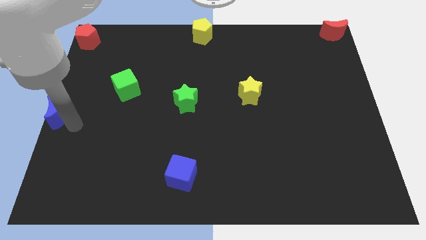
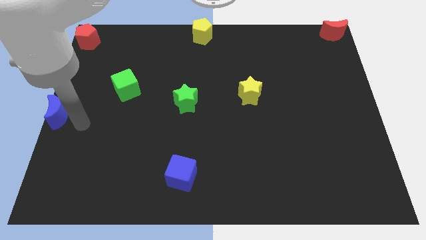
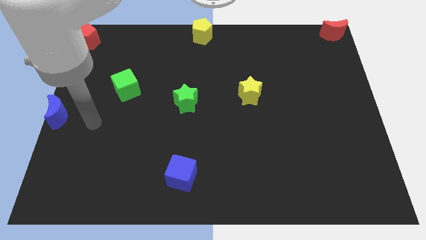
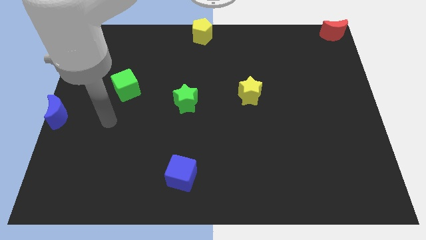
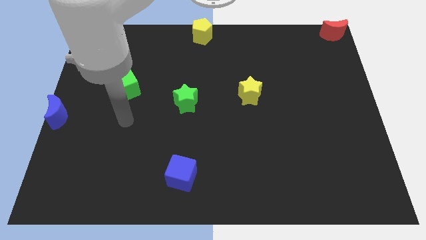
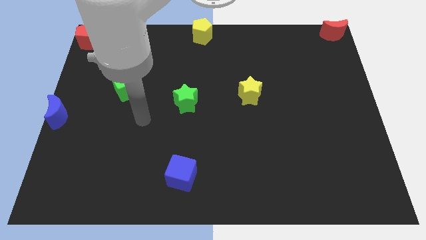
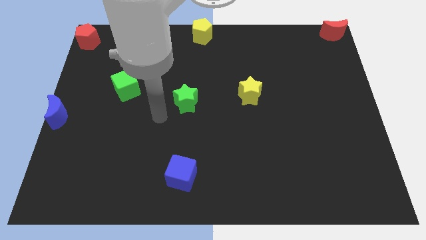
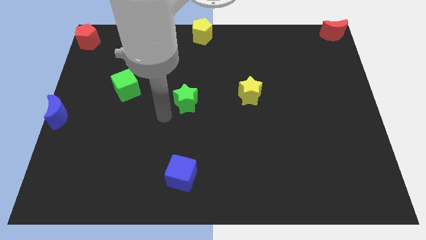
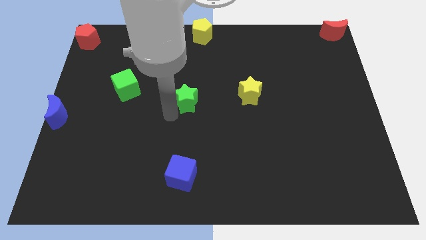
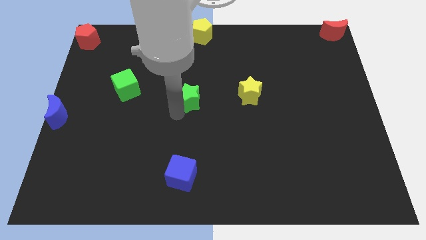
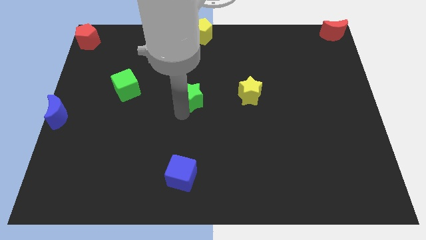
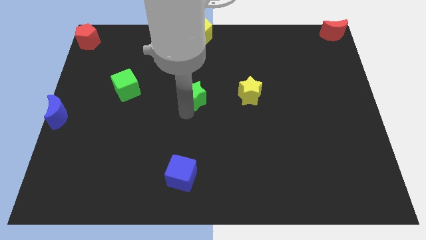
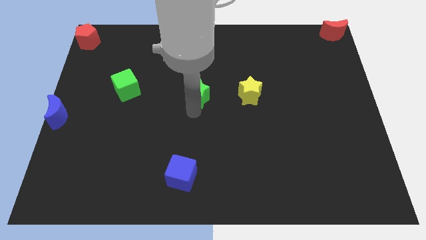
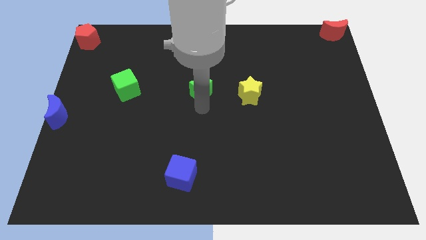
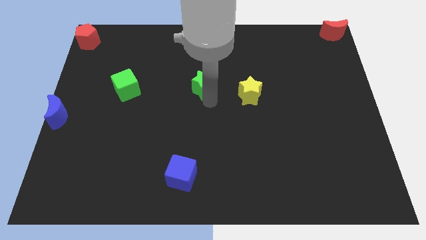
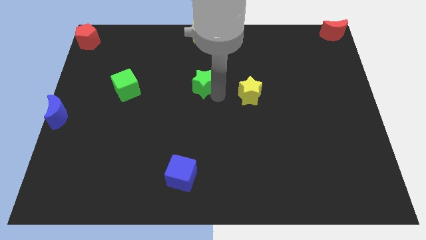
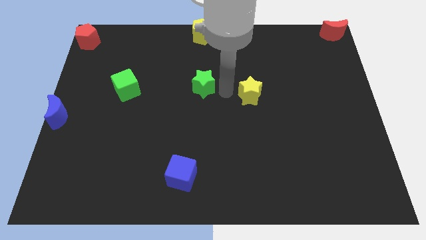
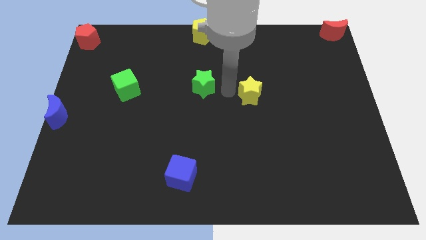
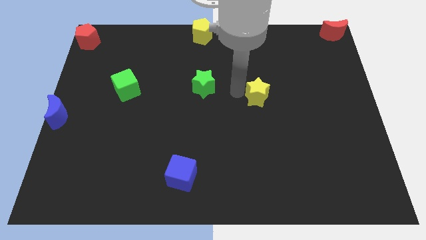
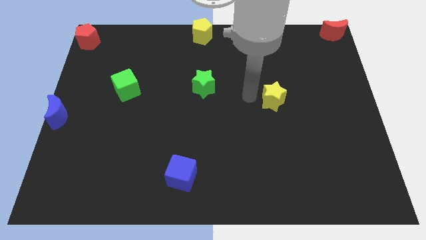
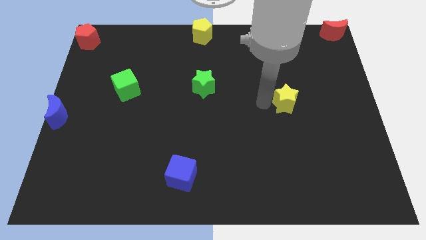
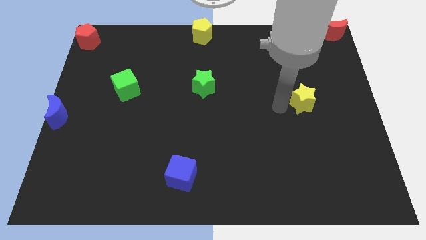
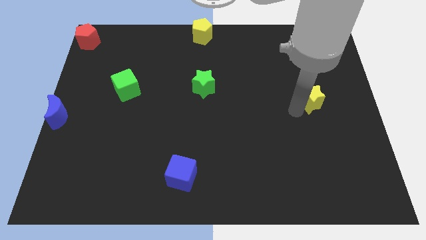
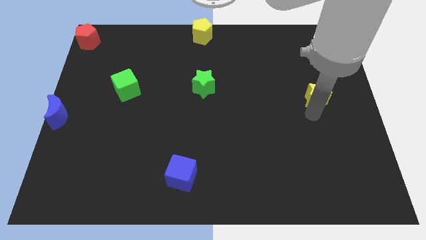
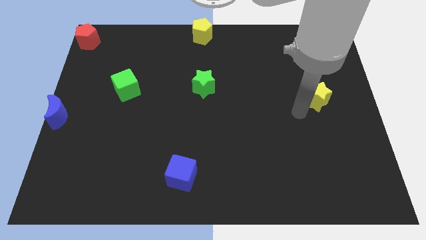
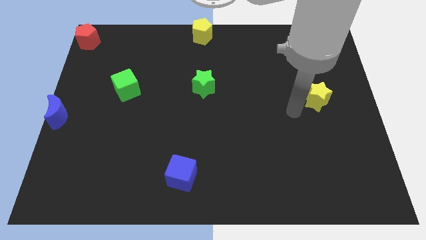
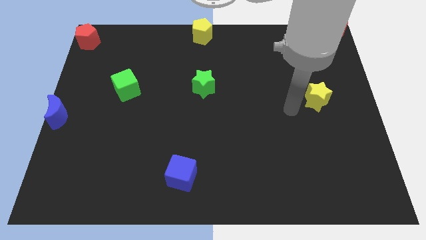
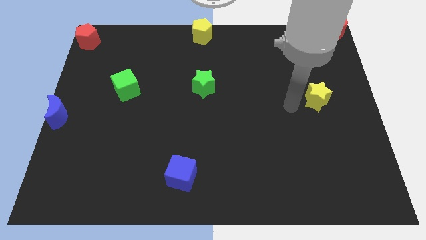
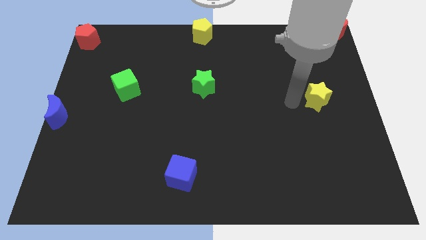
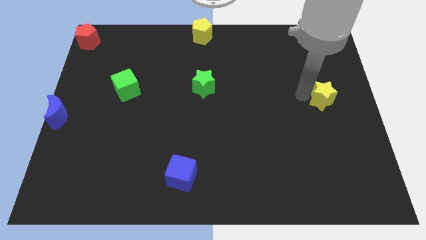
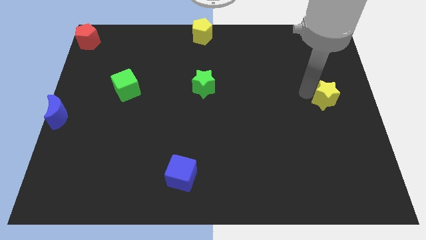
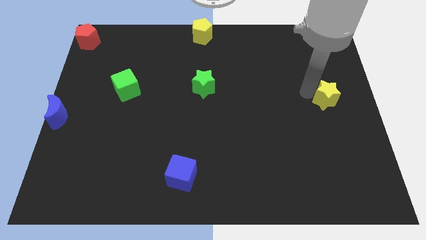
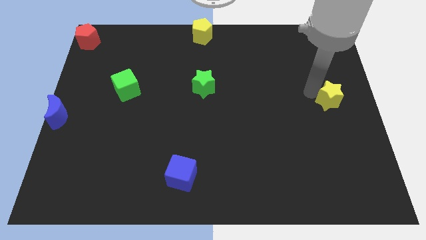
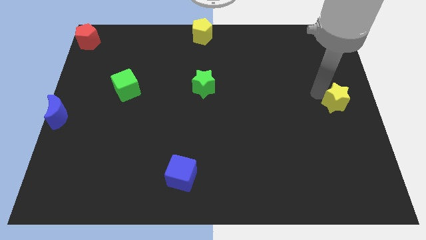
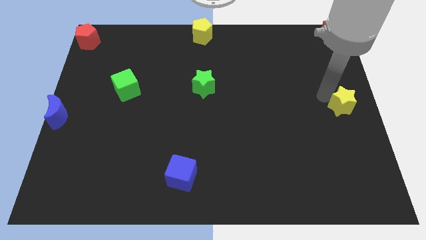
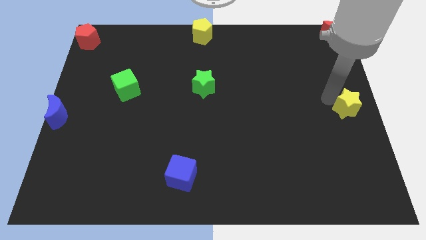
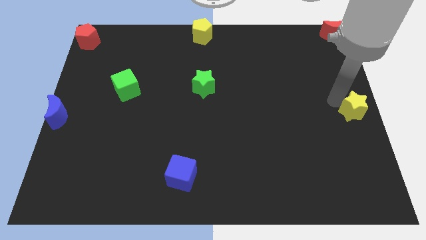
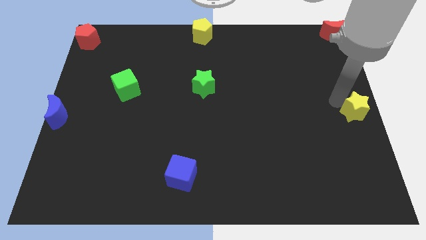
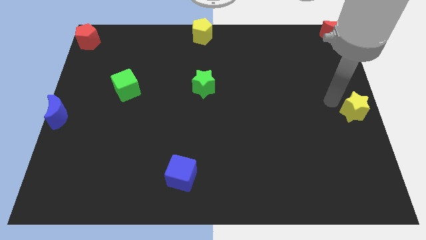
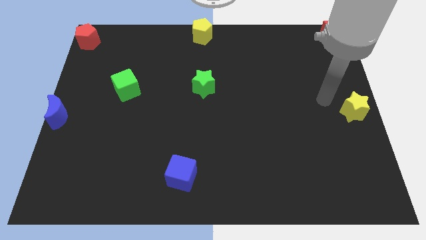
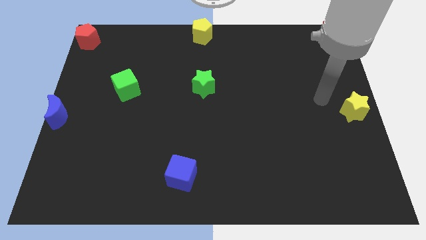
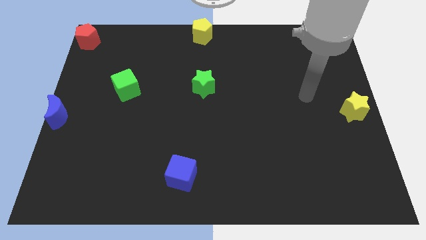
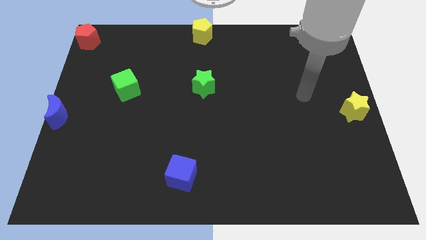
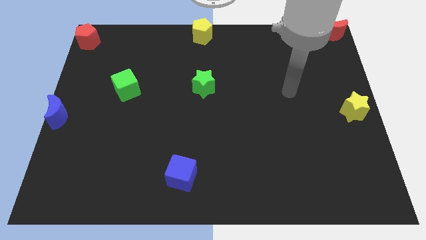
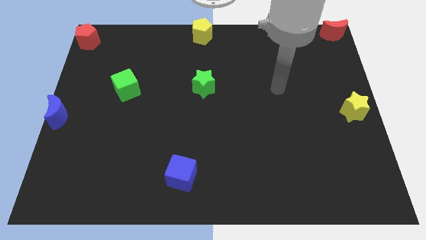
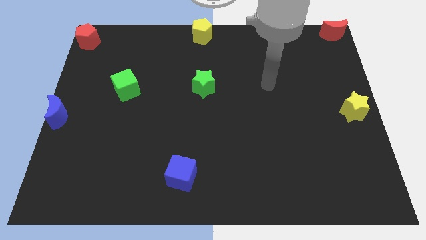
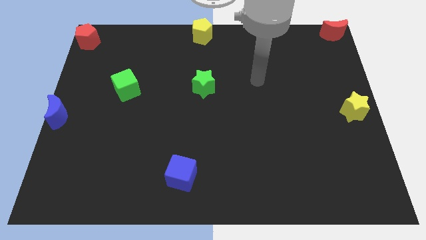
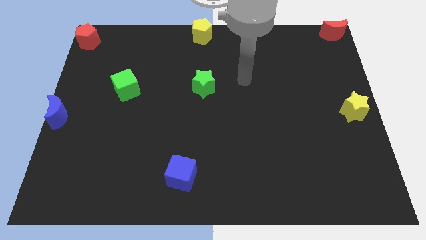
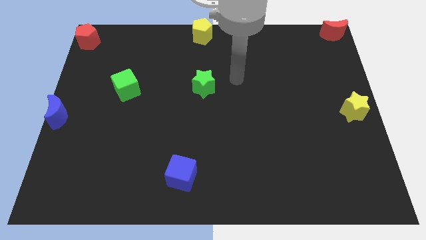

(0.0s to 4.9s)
move the yellow star to the center right of the board

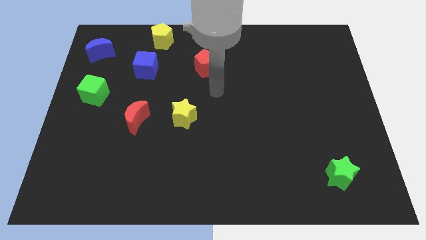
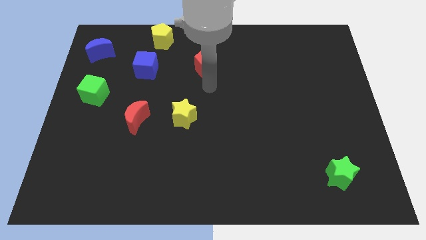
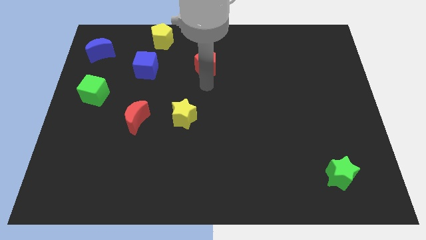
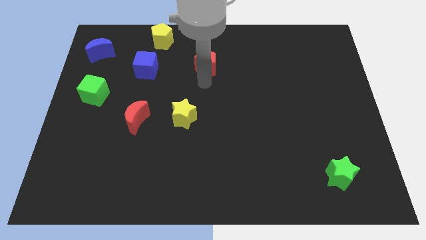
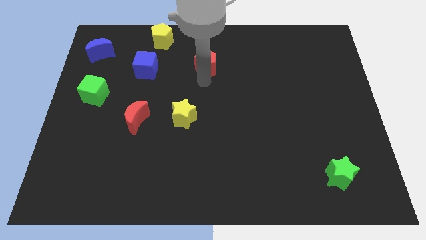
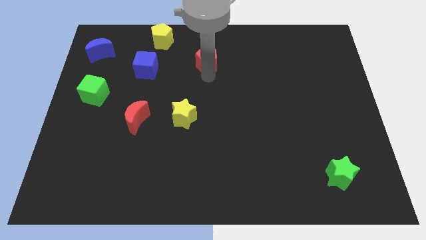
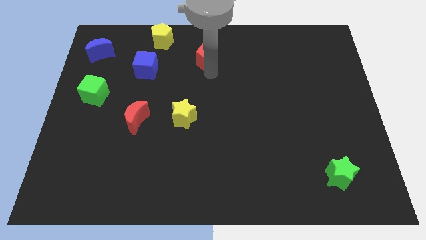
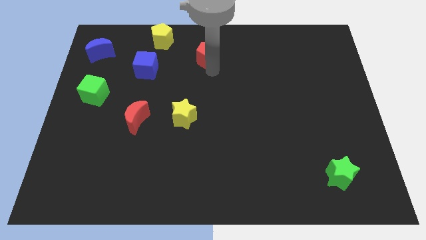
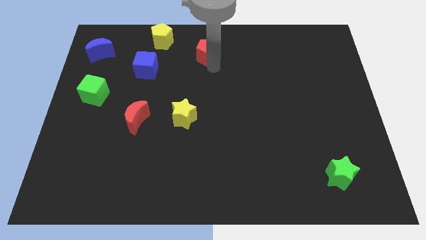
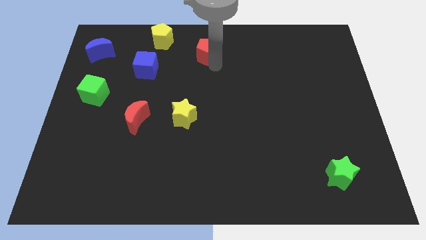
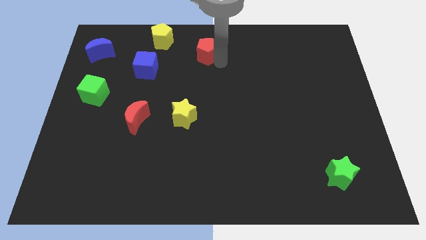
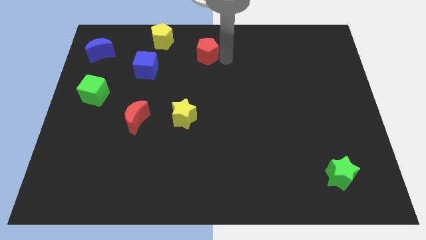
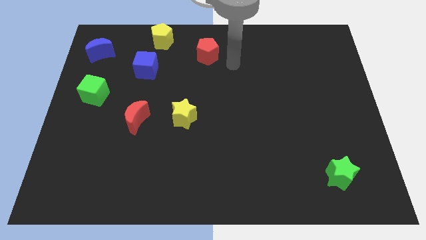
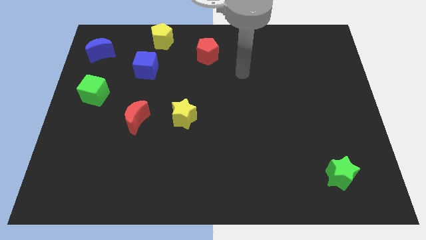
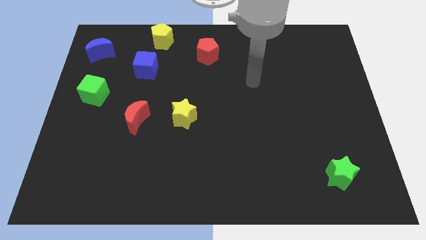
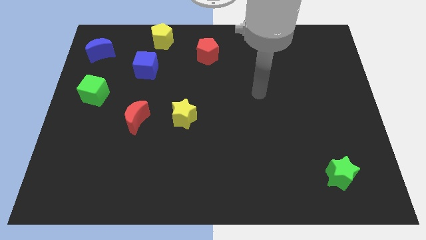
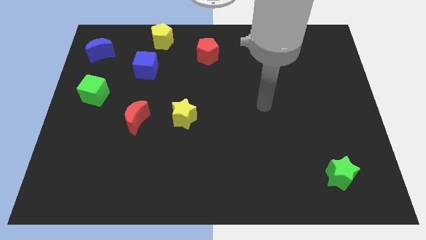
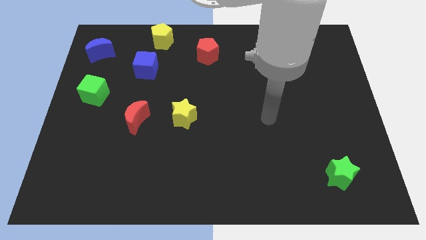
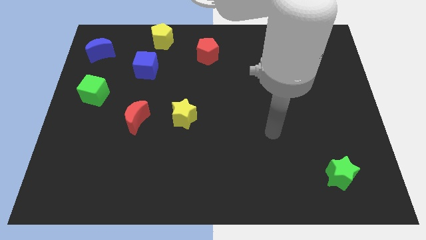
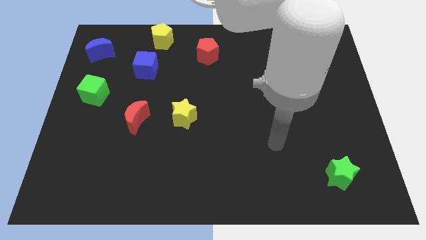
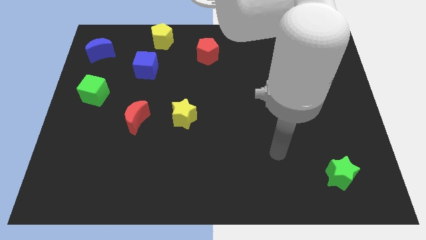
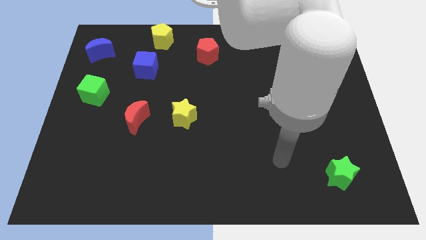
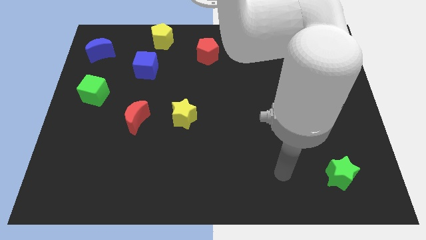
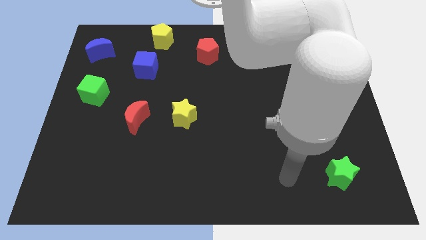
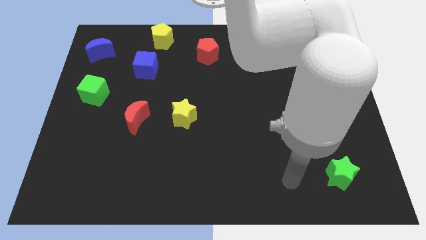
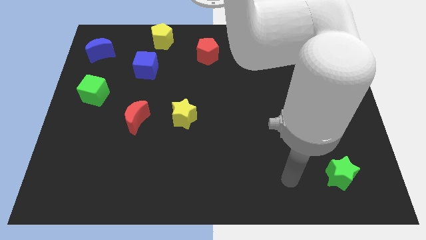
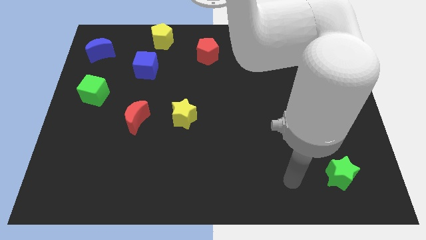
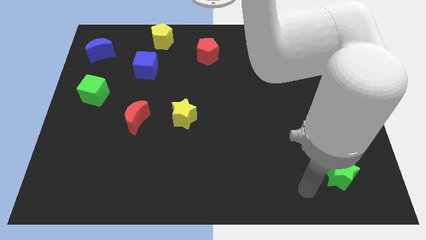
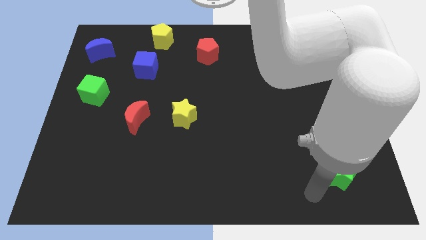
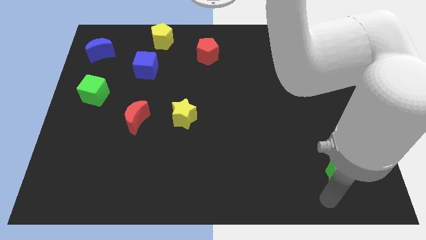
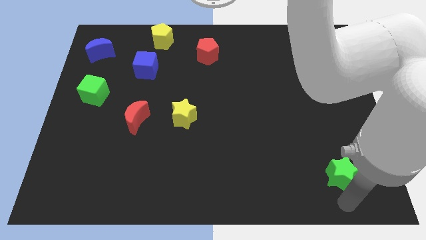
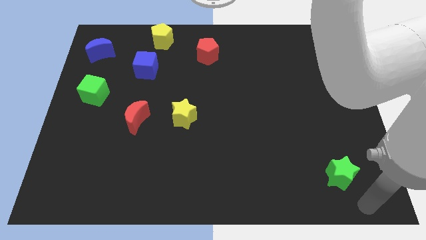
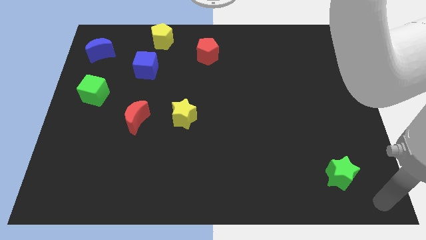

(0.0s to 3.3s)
move the red pentagon to the top center of the board

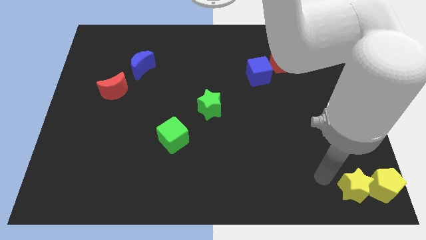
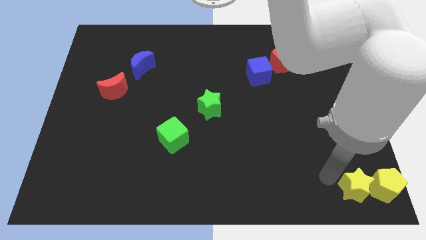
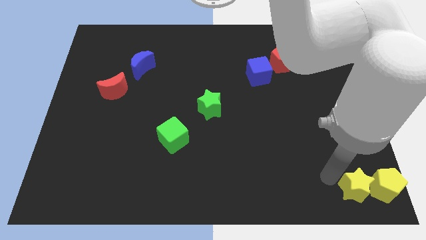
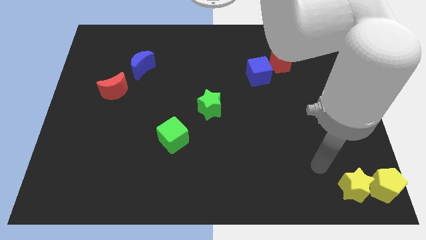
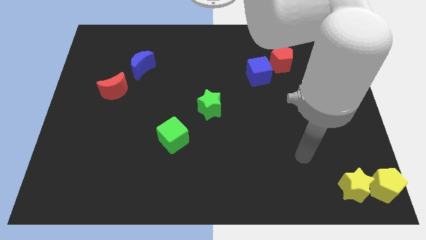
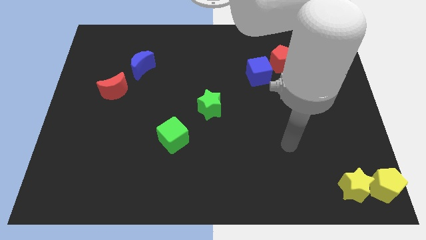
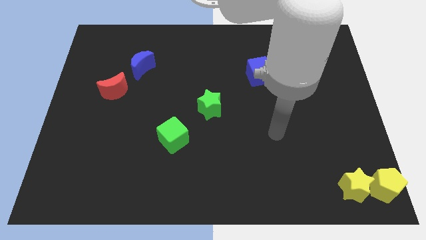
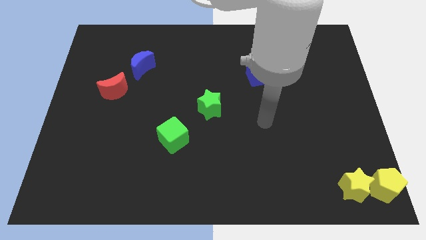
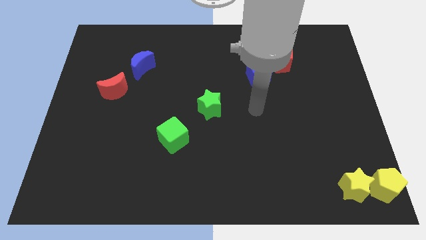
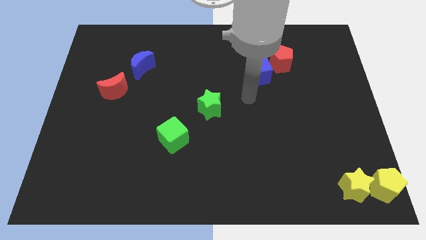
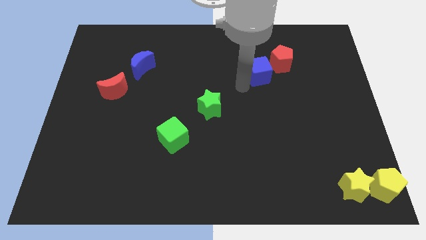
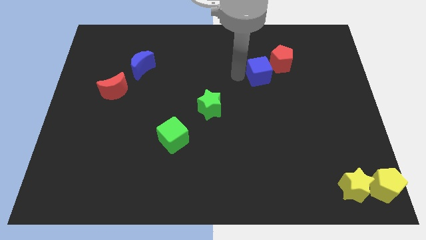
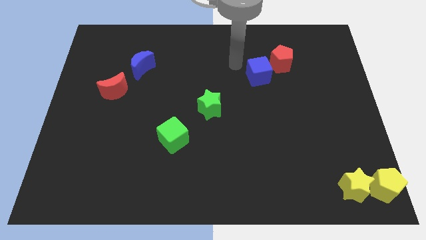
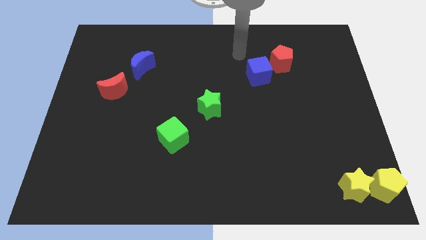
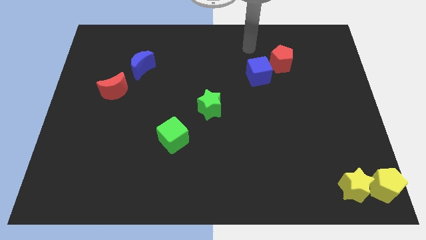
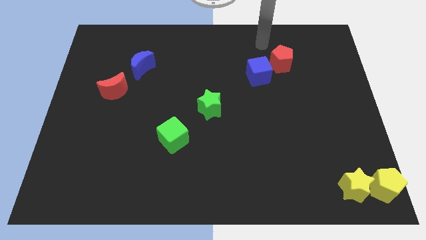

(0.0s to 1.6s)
move your arm to the top center of the board
